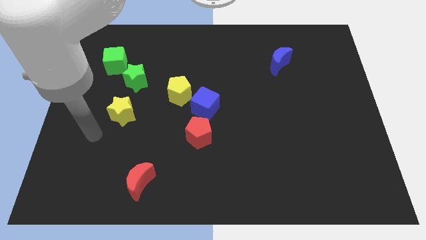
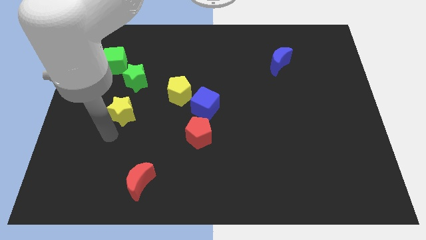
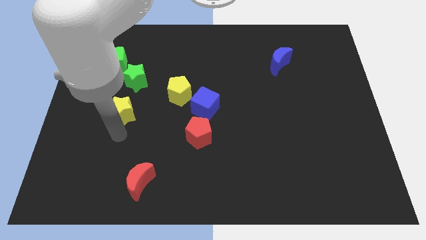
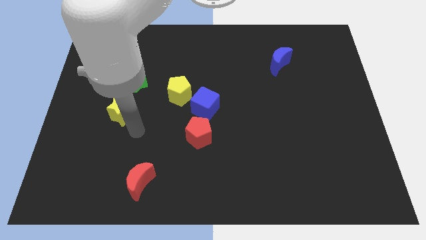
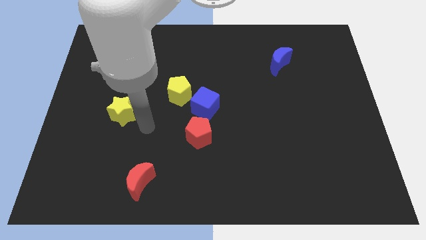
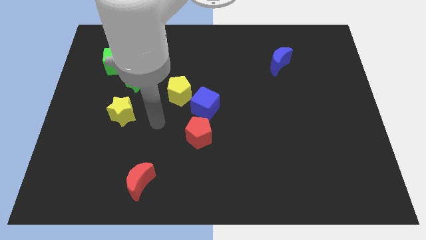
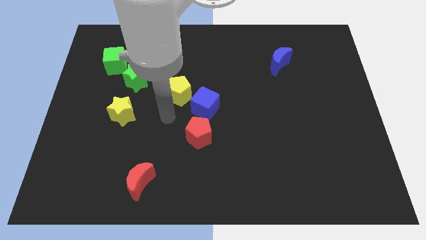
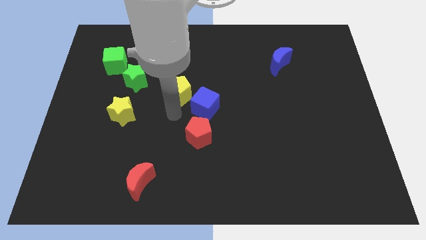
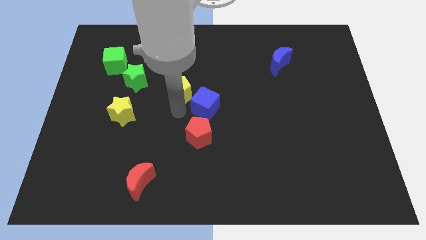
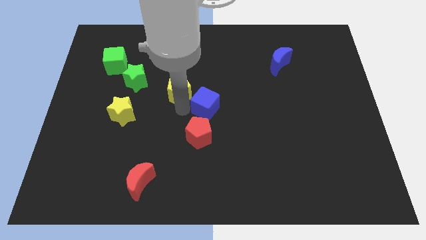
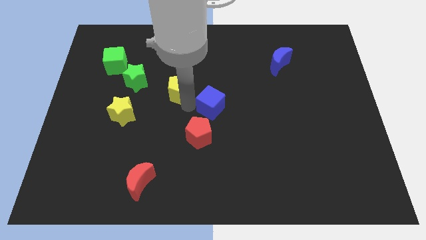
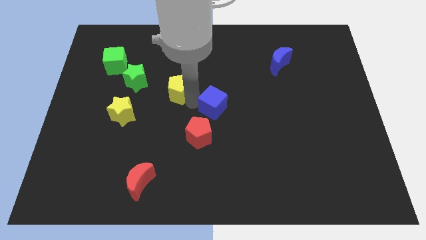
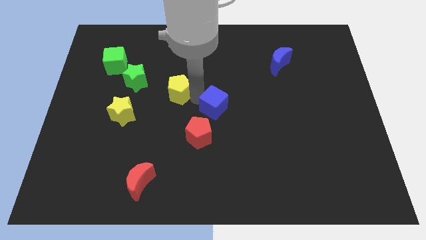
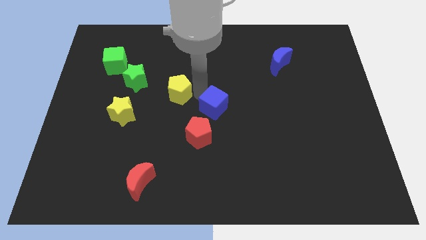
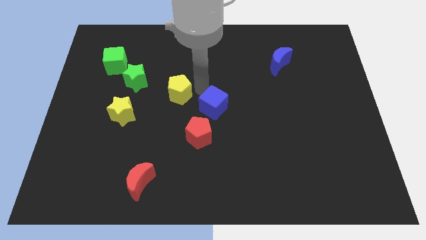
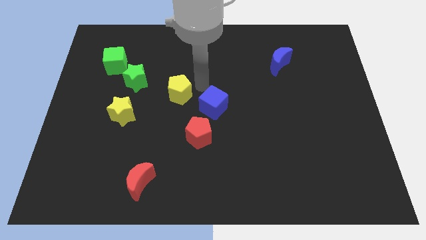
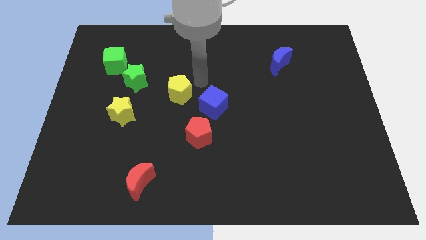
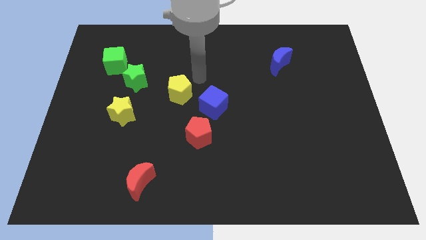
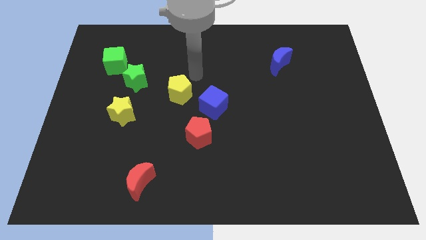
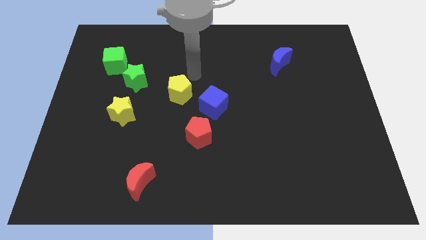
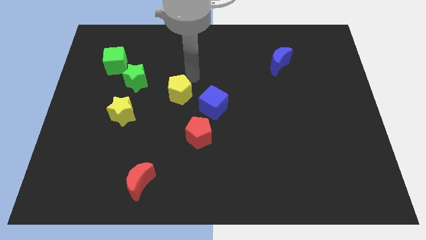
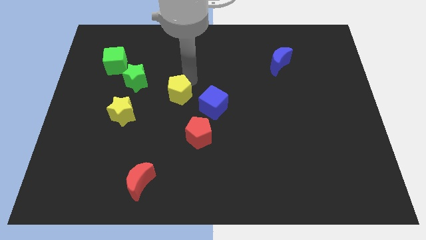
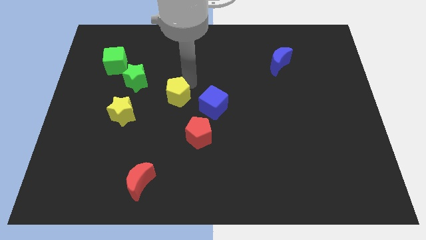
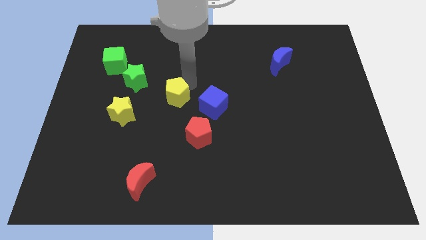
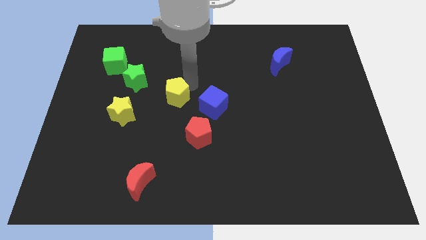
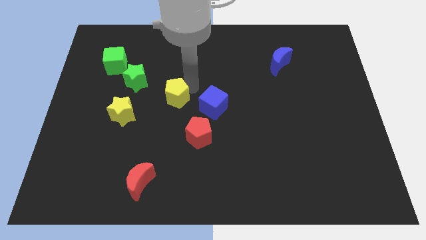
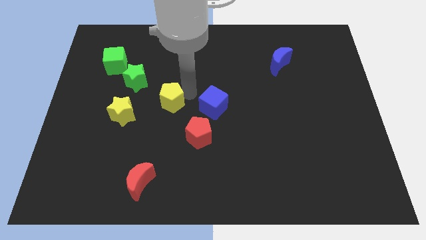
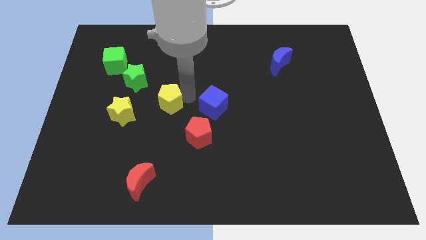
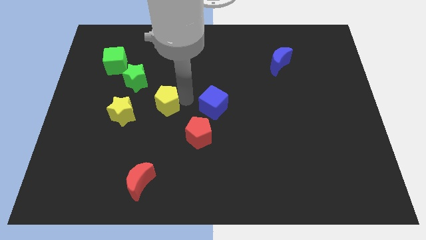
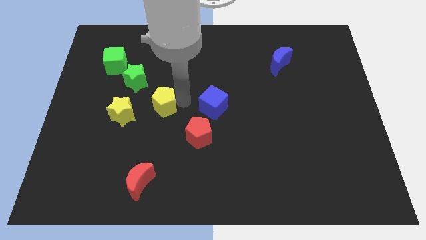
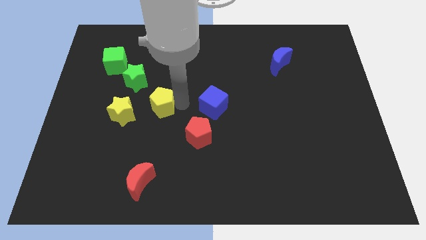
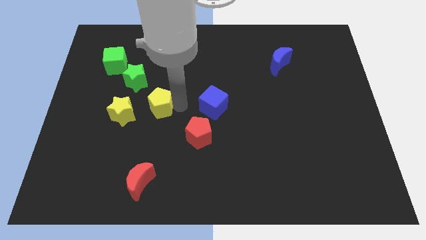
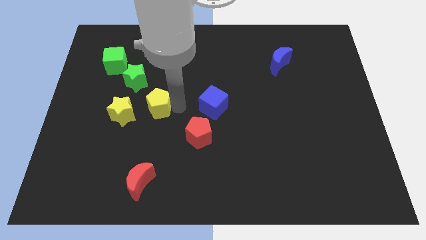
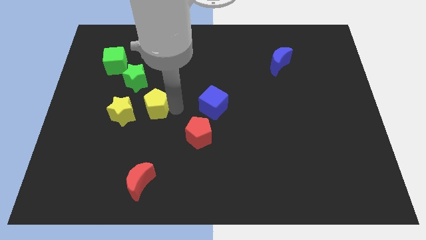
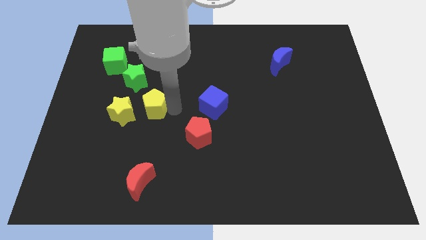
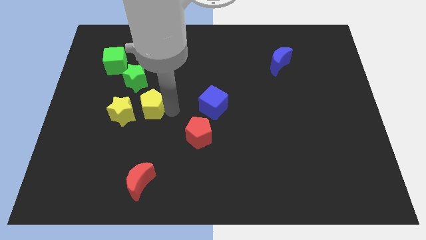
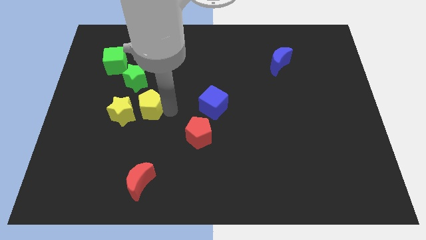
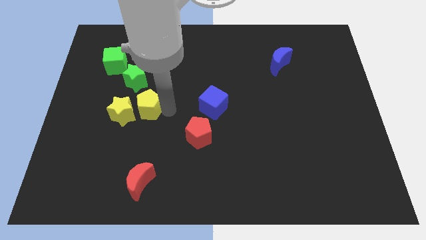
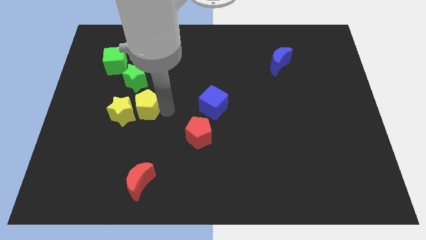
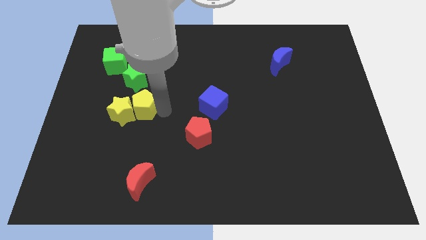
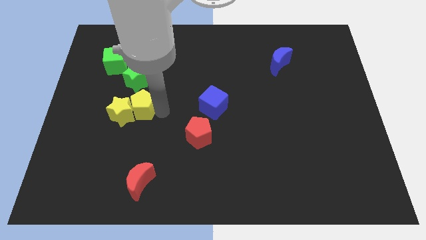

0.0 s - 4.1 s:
push the yellow pentagon close to the yellow star

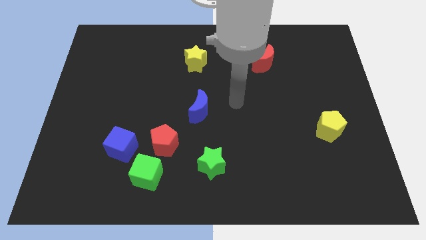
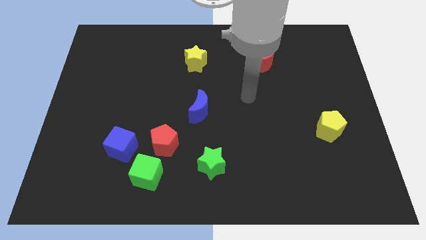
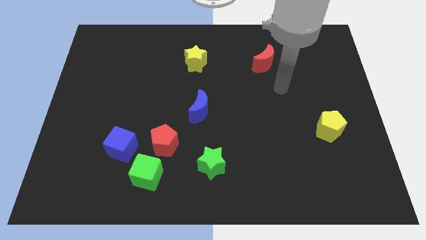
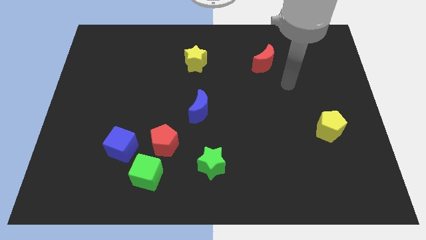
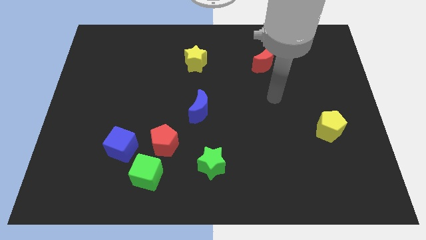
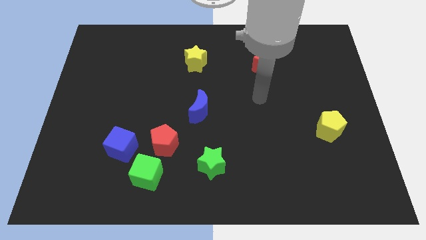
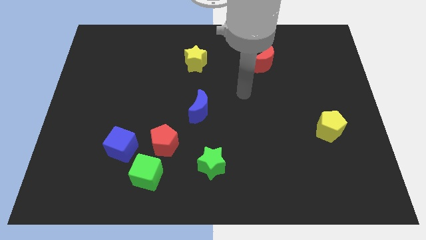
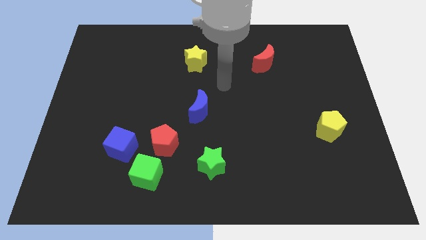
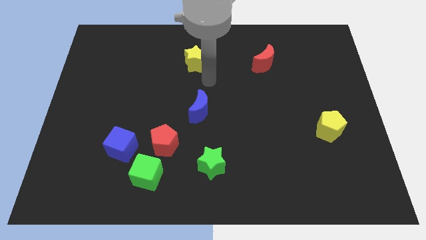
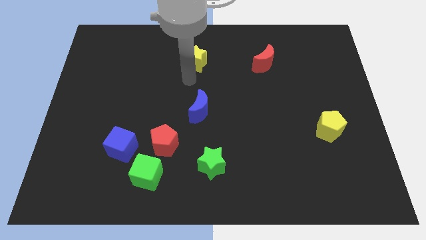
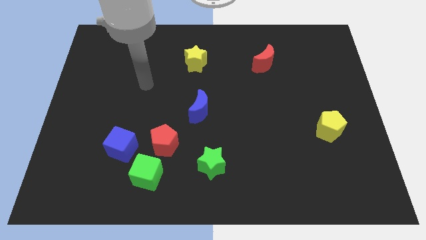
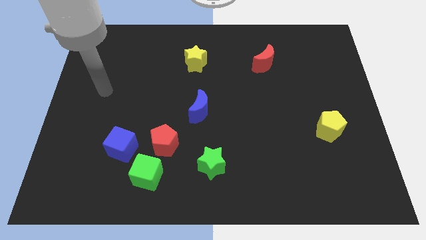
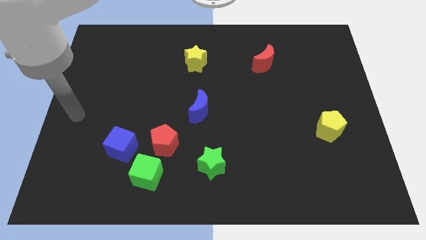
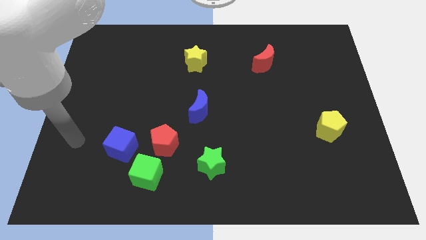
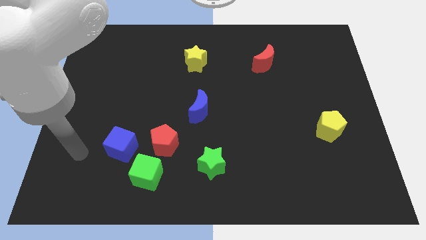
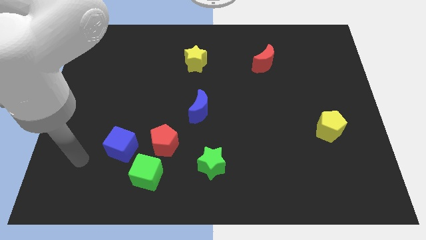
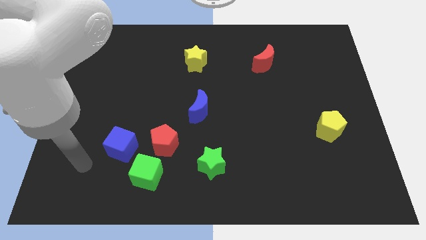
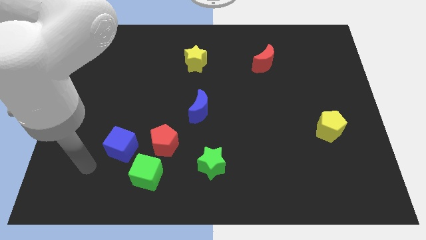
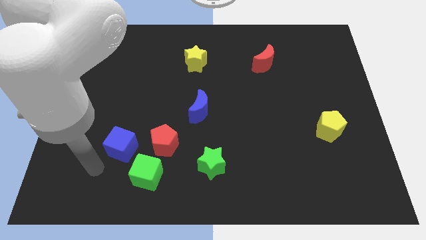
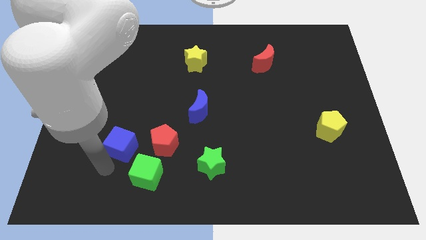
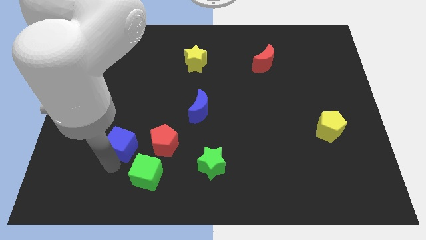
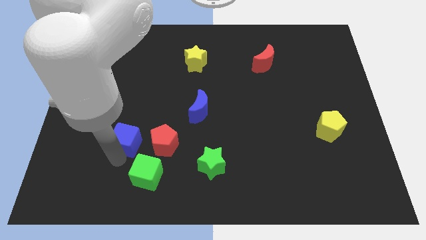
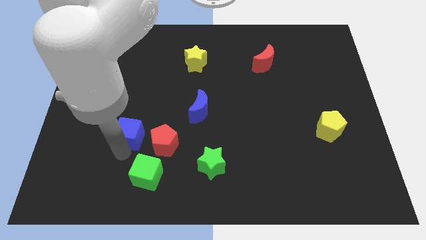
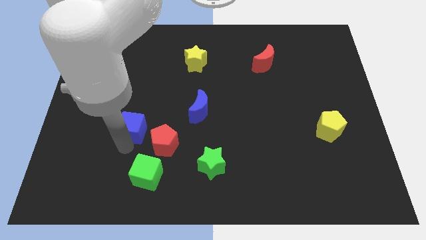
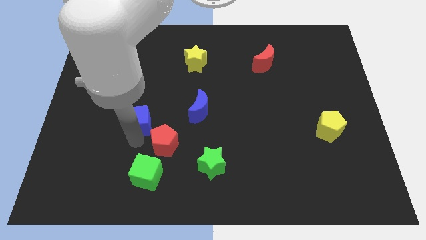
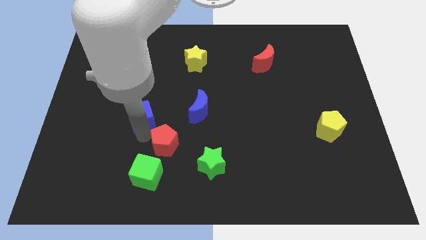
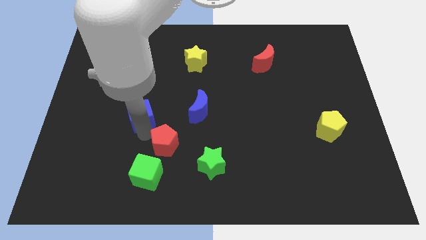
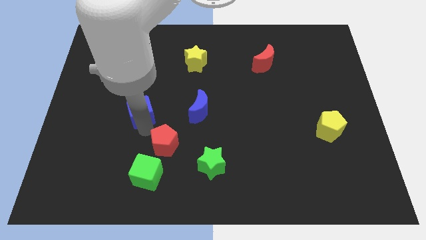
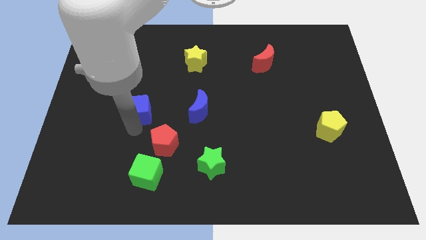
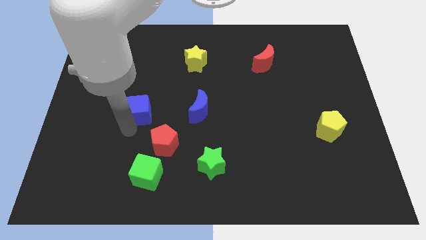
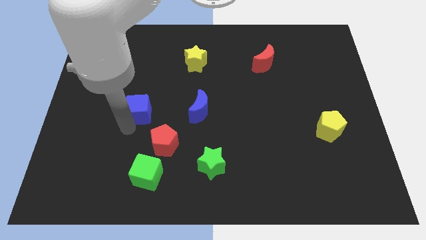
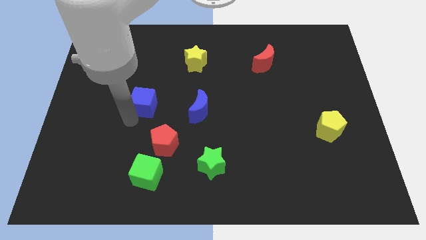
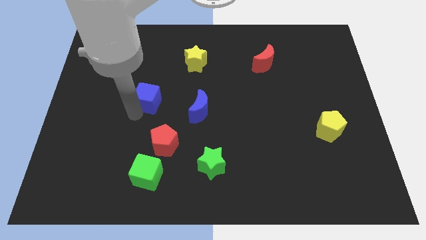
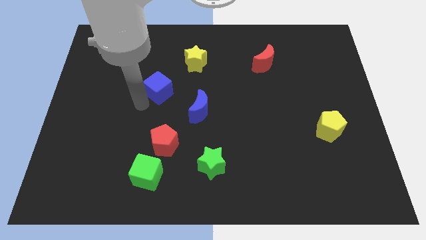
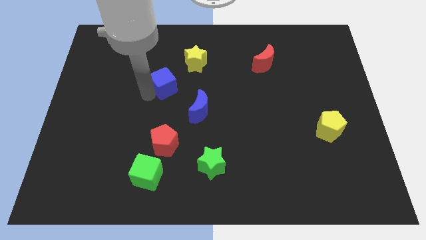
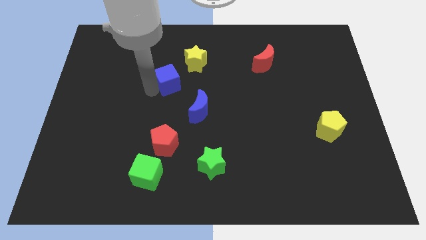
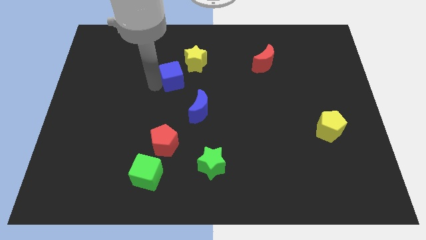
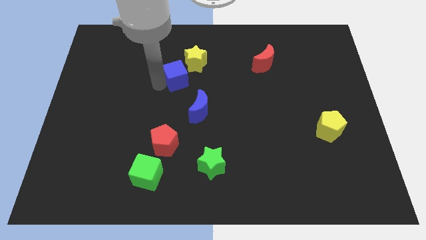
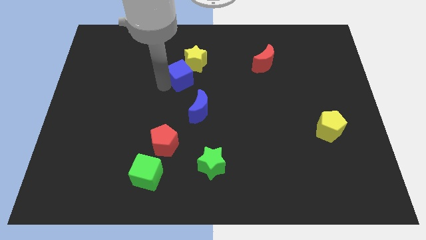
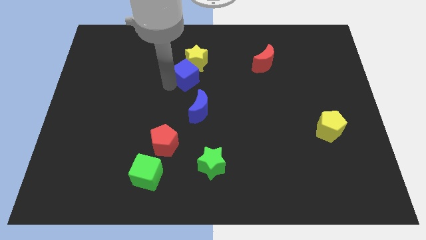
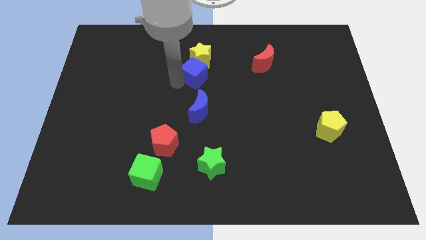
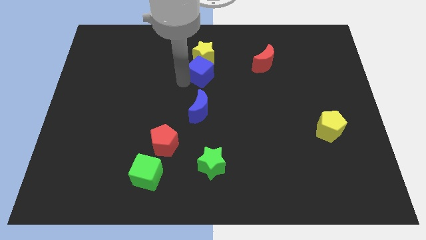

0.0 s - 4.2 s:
push the blue cube towards the yellow star

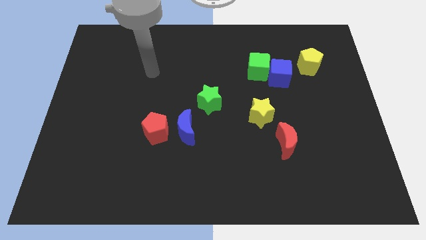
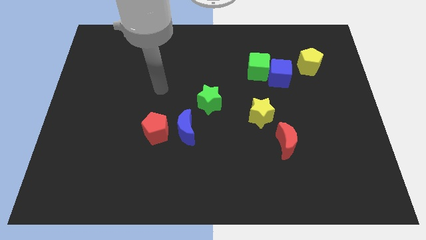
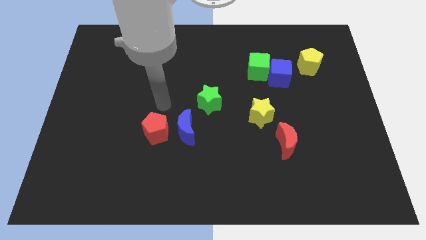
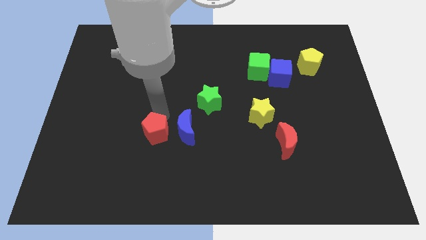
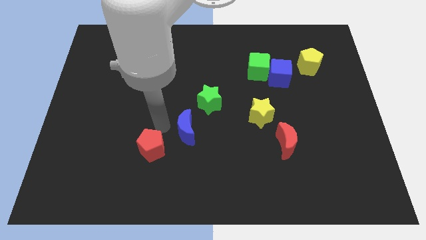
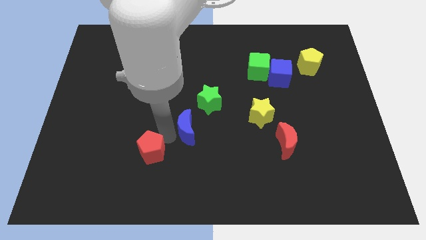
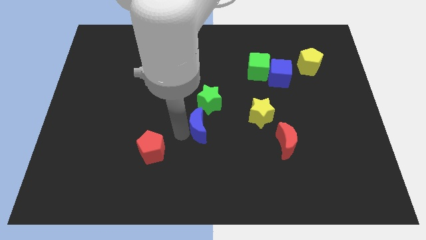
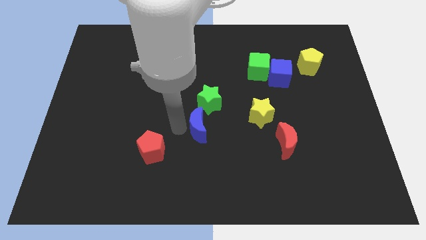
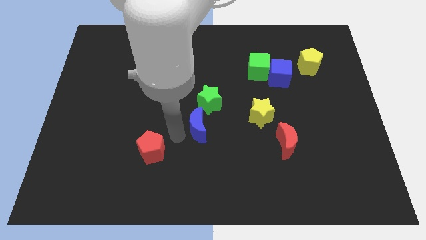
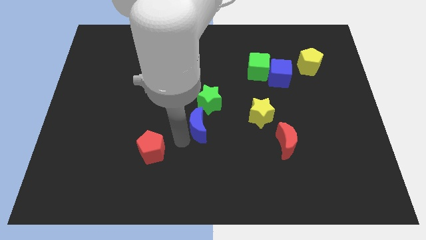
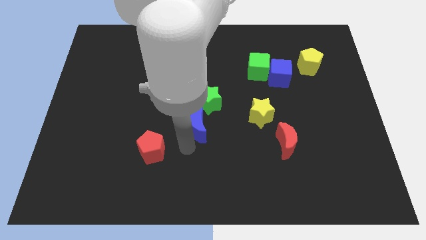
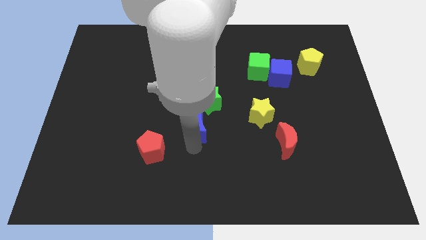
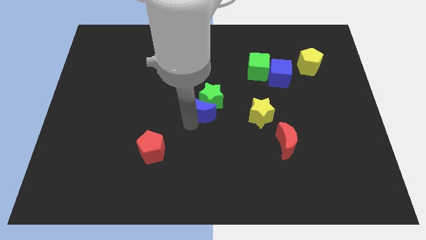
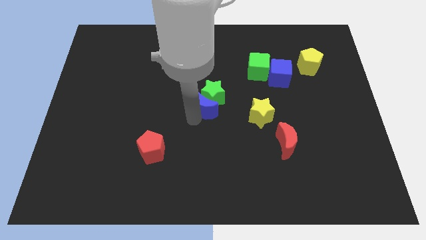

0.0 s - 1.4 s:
push the blue moon to the green star
